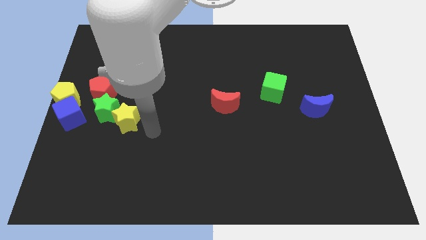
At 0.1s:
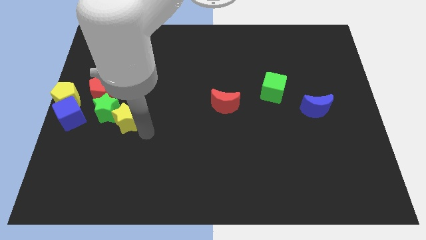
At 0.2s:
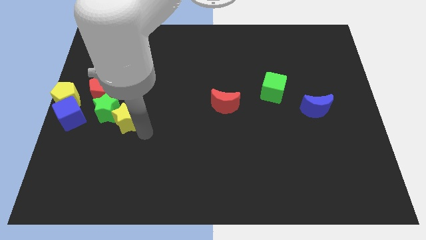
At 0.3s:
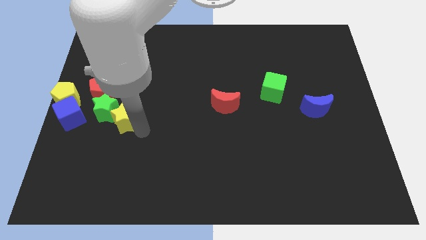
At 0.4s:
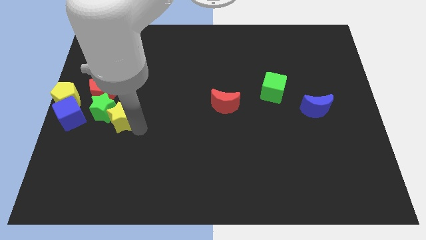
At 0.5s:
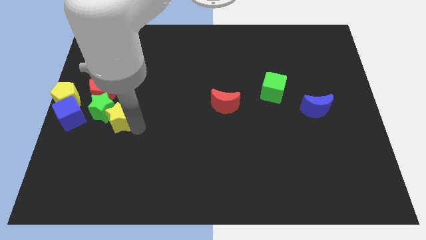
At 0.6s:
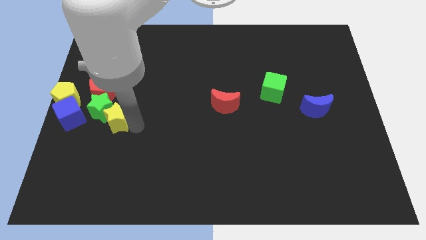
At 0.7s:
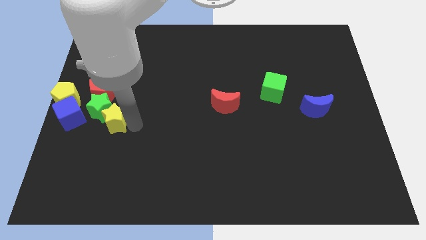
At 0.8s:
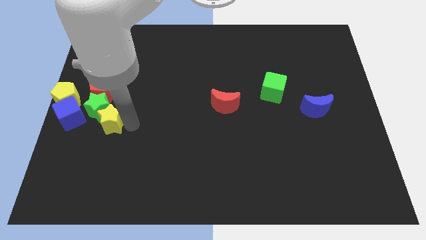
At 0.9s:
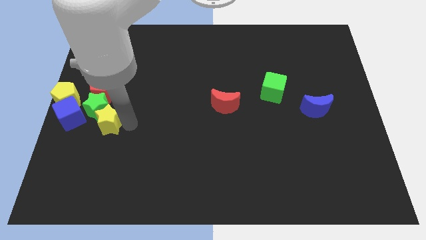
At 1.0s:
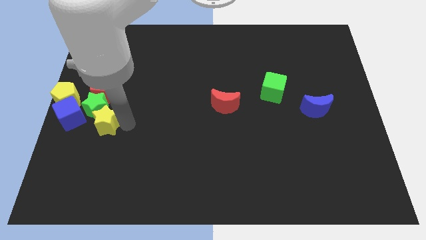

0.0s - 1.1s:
push the yellow star and green star to the left

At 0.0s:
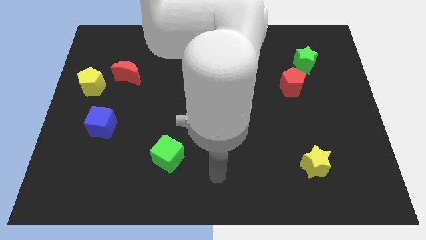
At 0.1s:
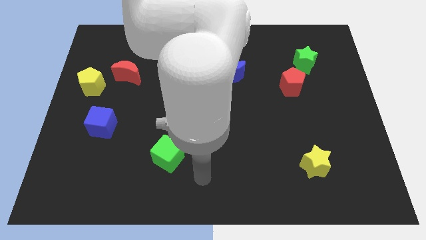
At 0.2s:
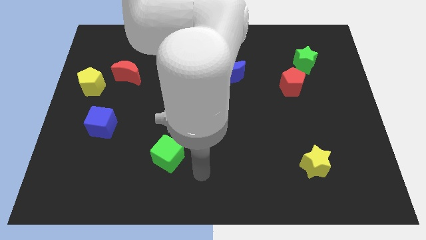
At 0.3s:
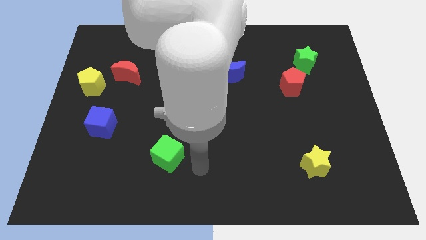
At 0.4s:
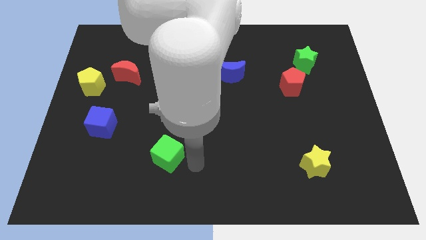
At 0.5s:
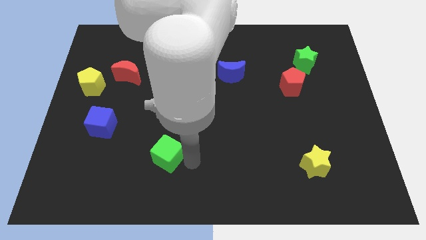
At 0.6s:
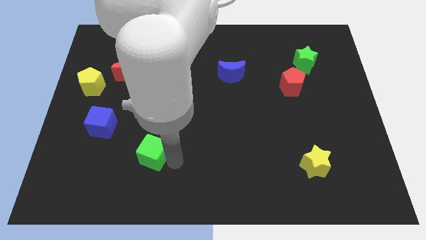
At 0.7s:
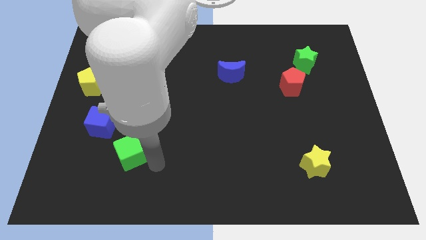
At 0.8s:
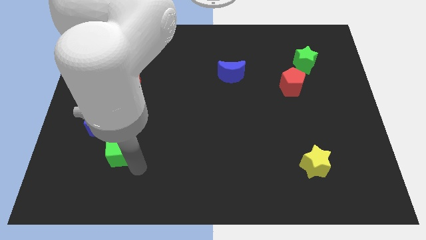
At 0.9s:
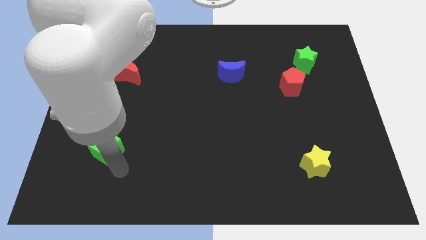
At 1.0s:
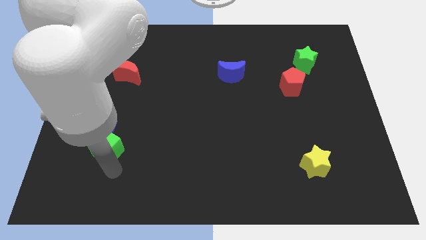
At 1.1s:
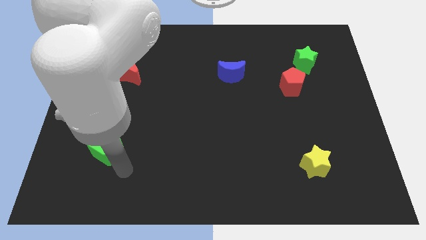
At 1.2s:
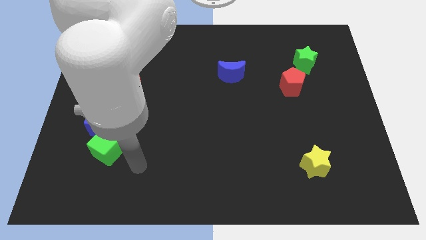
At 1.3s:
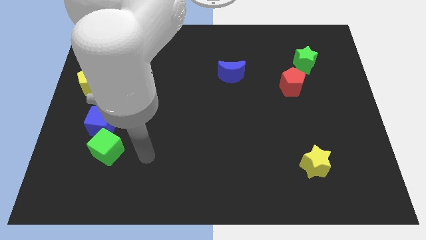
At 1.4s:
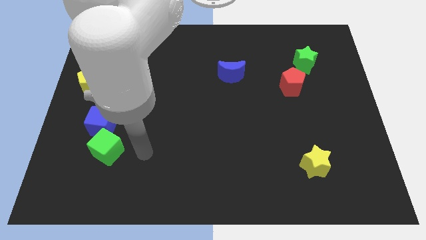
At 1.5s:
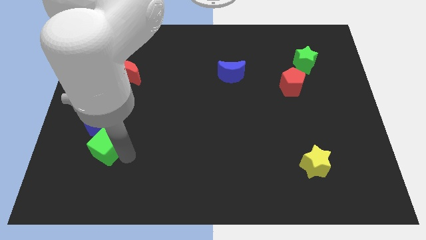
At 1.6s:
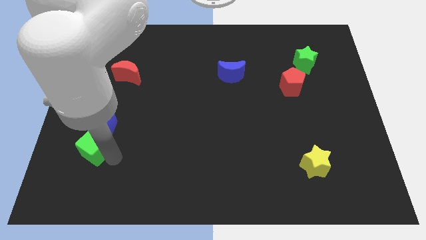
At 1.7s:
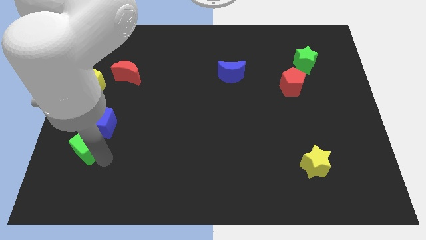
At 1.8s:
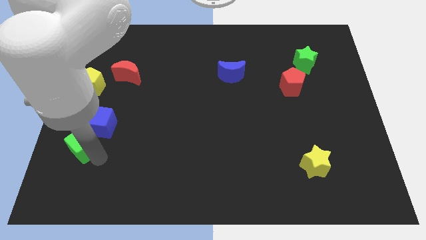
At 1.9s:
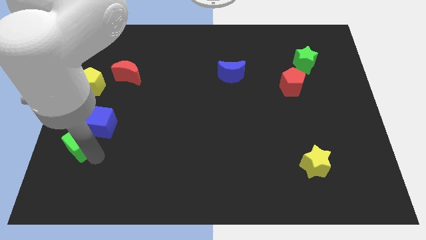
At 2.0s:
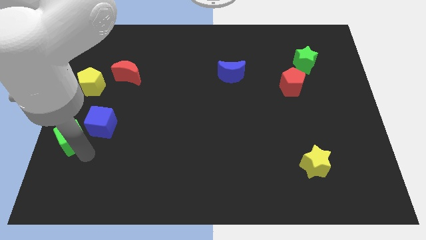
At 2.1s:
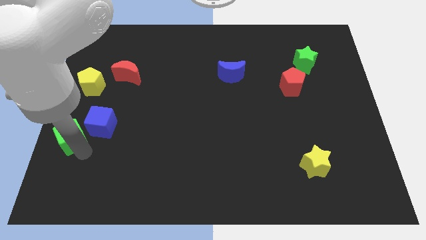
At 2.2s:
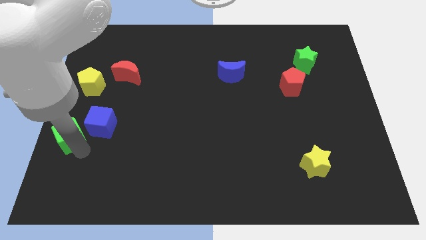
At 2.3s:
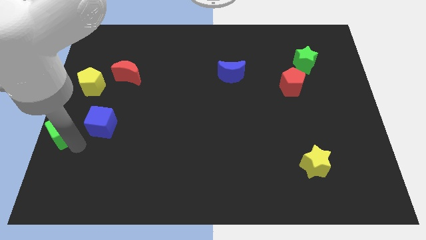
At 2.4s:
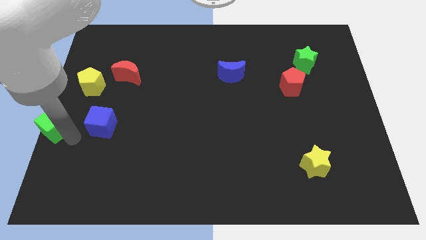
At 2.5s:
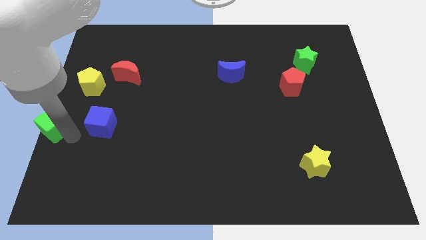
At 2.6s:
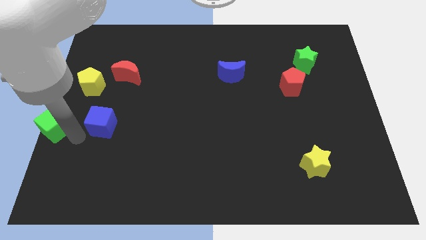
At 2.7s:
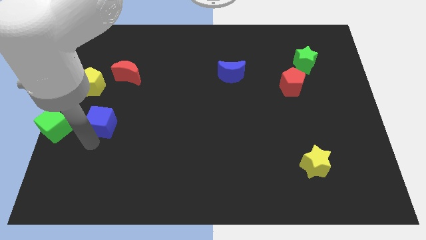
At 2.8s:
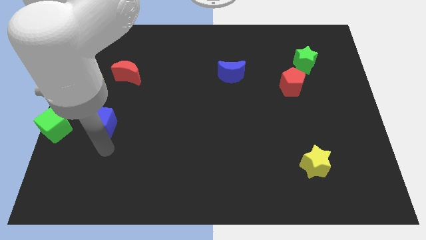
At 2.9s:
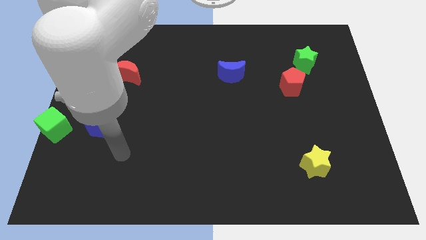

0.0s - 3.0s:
place the green cube to left center of the board

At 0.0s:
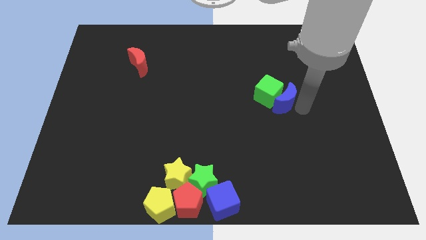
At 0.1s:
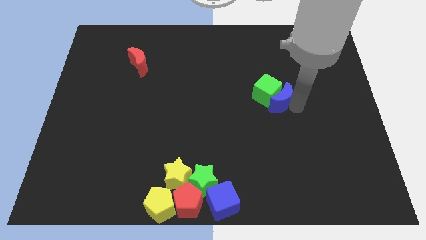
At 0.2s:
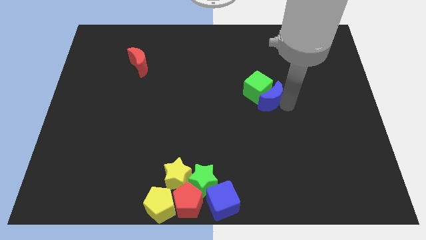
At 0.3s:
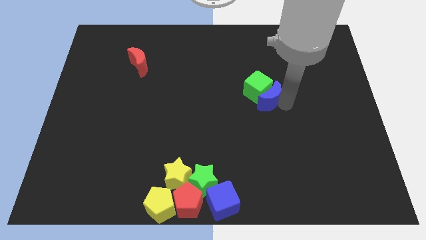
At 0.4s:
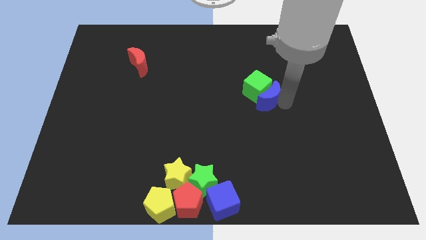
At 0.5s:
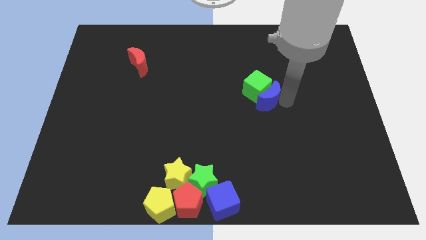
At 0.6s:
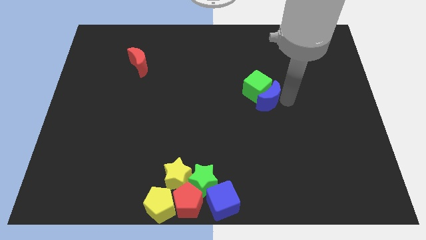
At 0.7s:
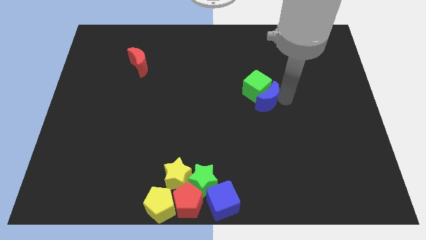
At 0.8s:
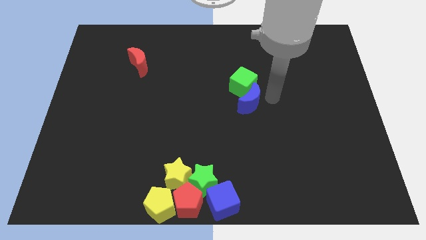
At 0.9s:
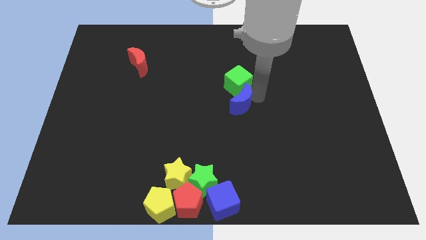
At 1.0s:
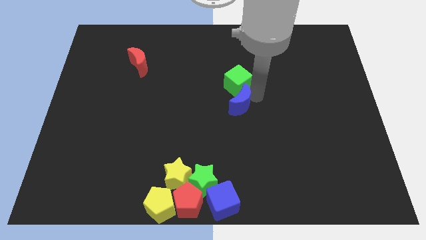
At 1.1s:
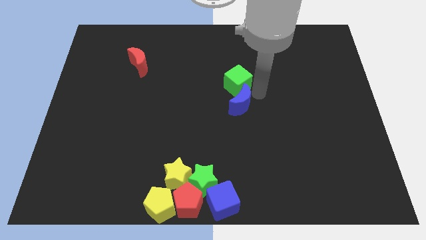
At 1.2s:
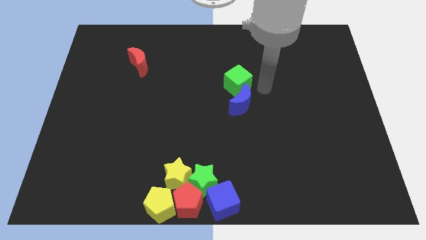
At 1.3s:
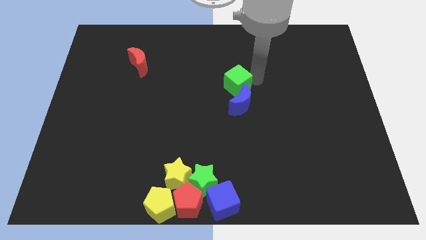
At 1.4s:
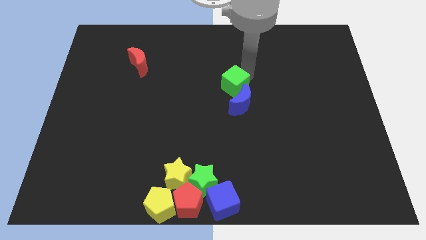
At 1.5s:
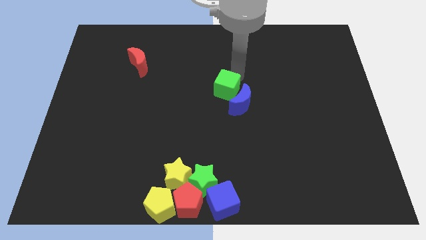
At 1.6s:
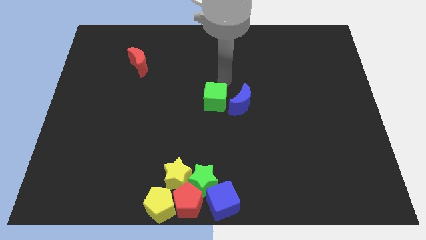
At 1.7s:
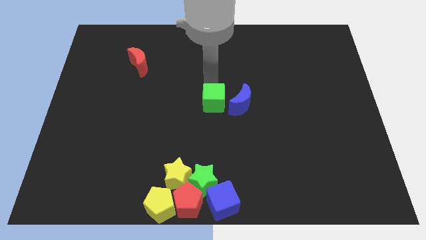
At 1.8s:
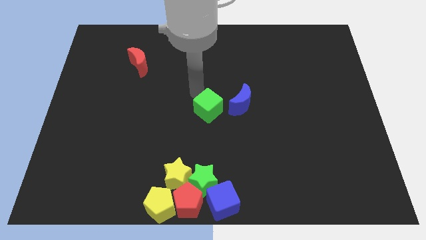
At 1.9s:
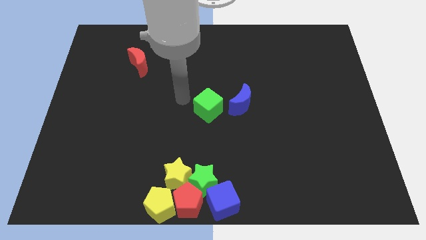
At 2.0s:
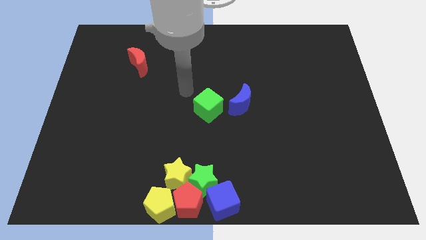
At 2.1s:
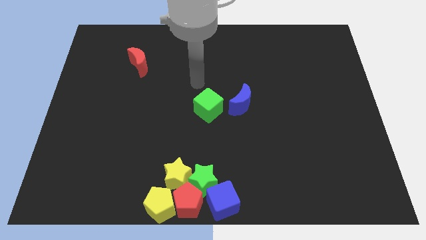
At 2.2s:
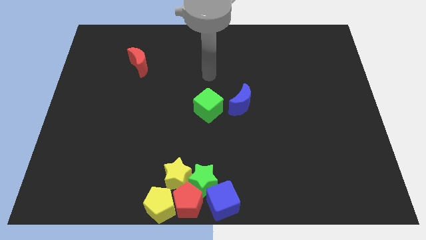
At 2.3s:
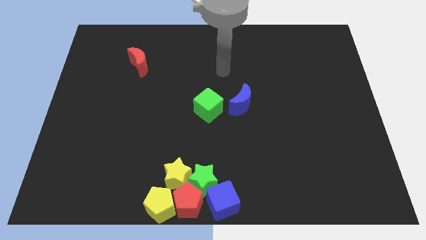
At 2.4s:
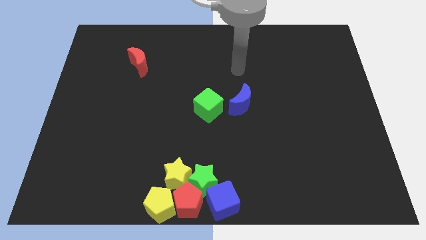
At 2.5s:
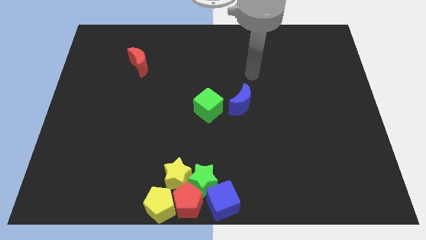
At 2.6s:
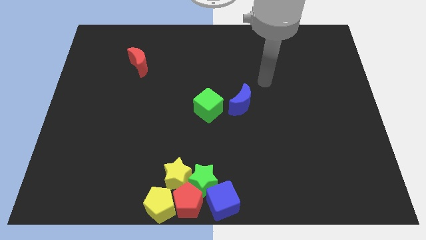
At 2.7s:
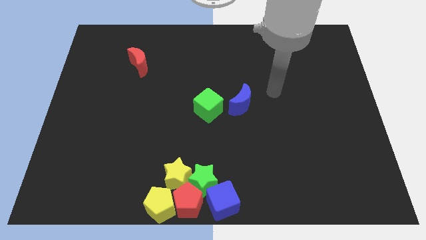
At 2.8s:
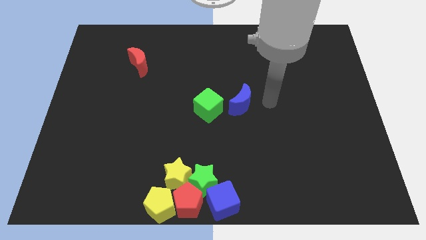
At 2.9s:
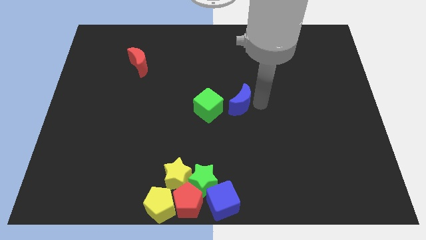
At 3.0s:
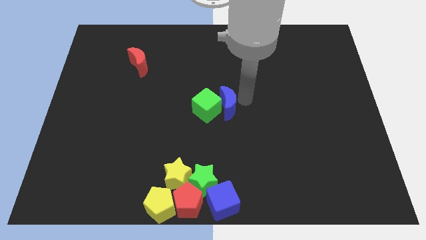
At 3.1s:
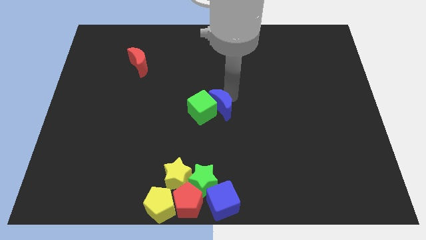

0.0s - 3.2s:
place the green cube and blue crescent together at center of the board

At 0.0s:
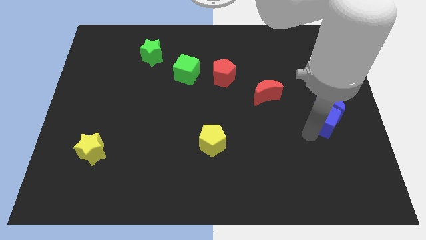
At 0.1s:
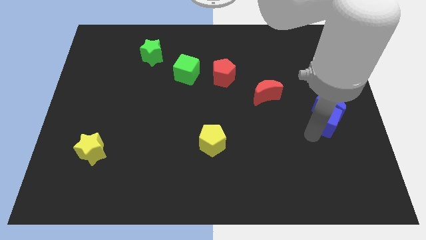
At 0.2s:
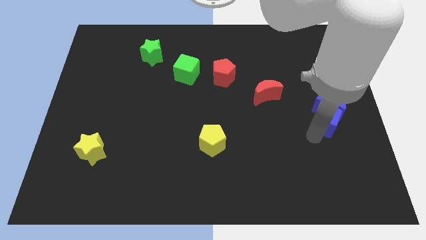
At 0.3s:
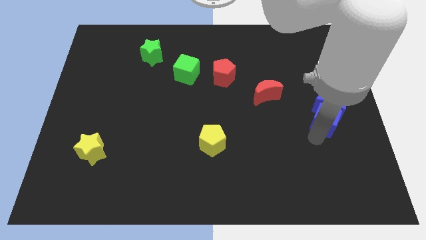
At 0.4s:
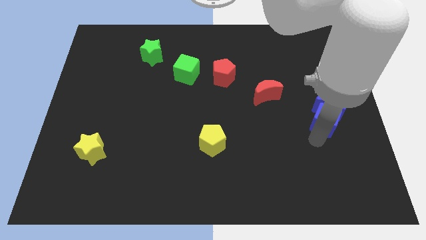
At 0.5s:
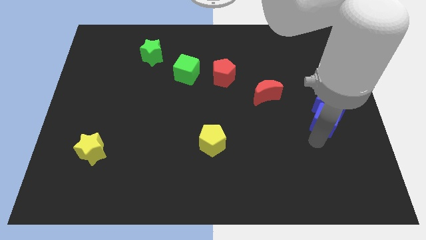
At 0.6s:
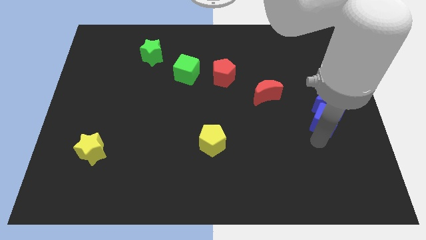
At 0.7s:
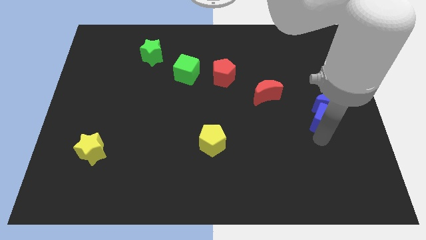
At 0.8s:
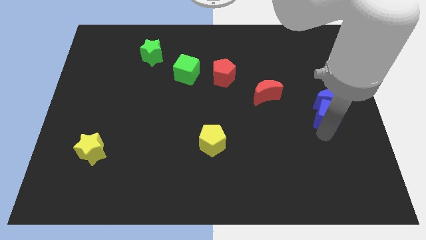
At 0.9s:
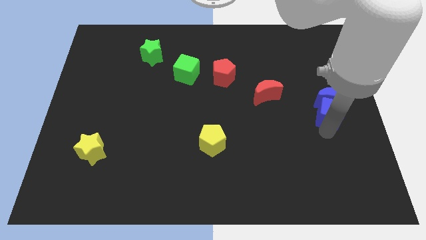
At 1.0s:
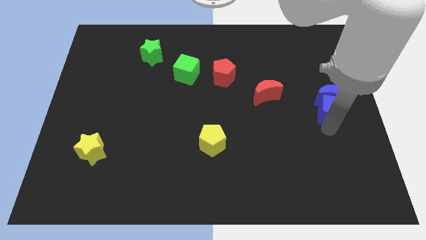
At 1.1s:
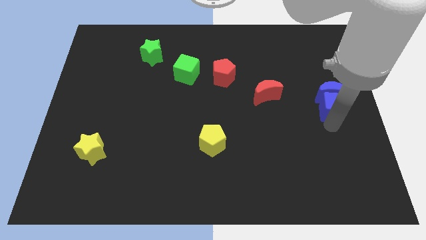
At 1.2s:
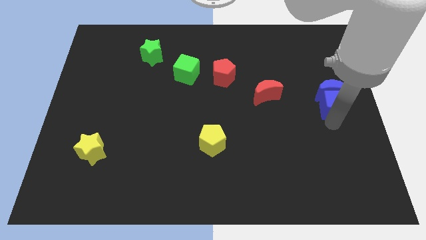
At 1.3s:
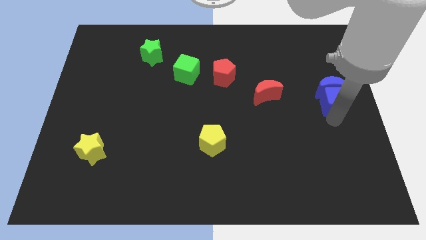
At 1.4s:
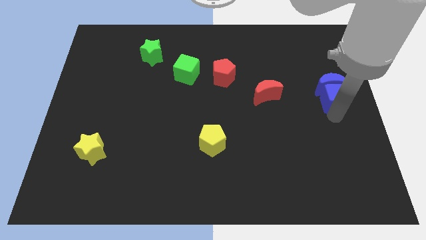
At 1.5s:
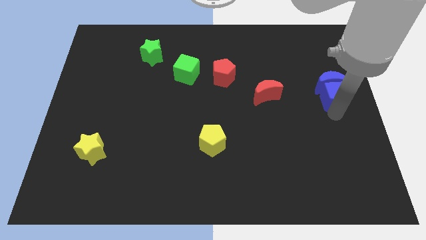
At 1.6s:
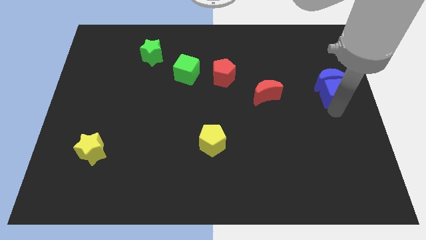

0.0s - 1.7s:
move the blue cube along with blue crescent to the right of the red crescent
